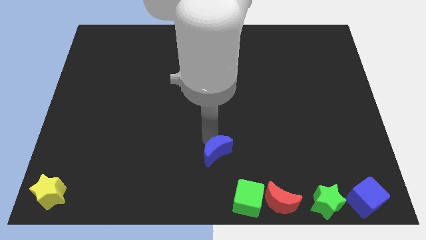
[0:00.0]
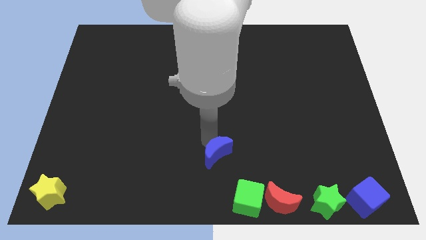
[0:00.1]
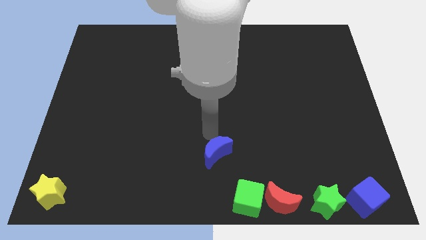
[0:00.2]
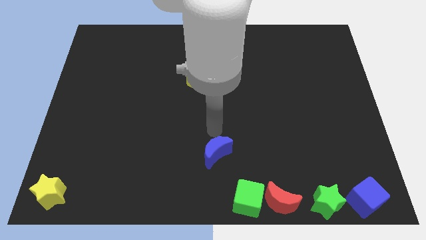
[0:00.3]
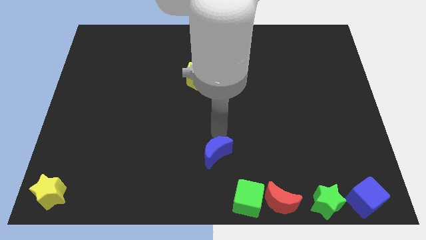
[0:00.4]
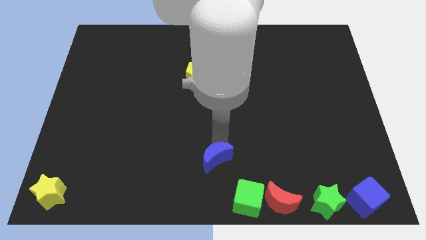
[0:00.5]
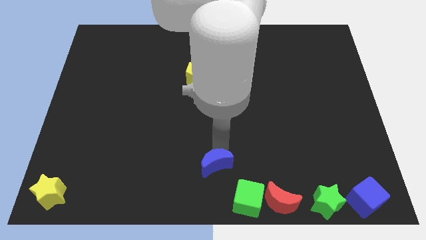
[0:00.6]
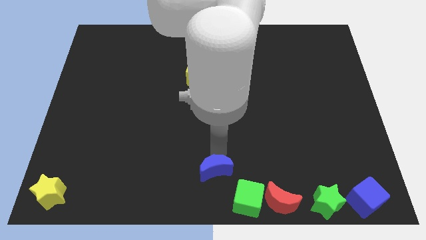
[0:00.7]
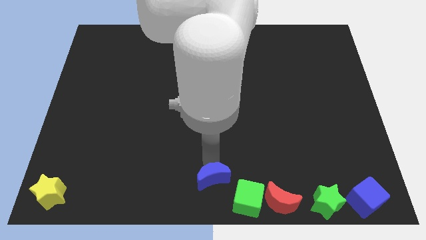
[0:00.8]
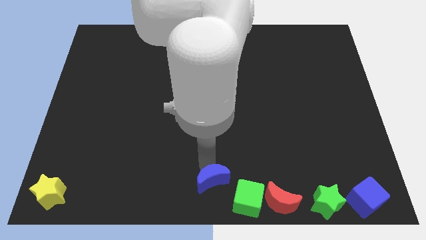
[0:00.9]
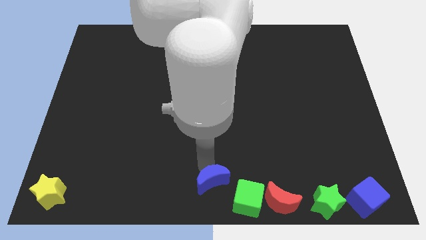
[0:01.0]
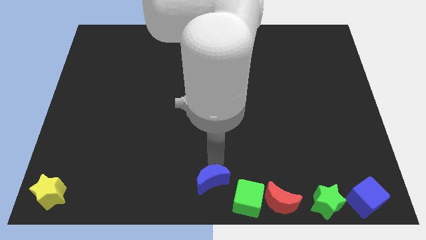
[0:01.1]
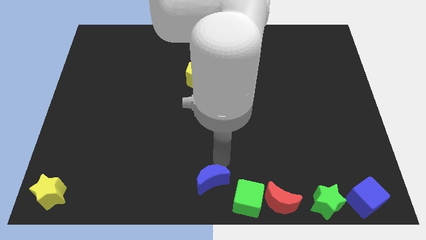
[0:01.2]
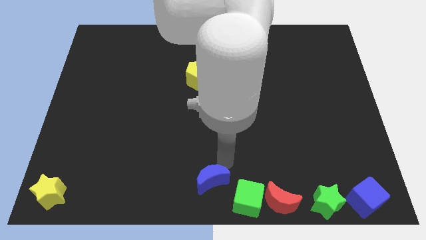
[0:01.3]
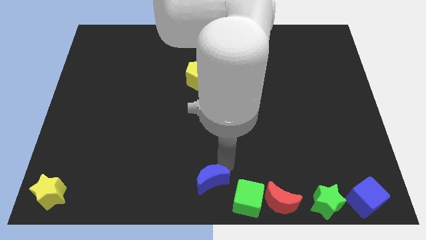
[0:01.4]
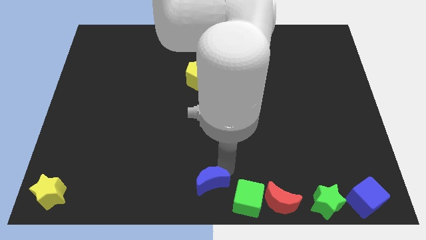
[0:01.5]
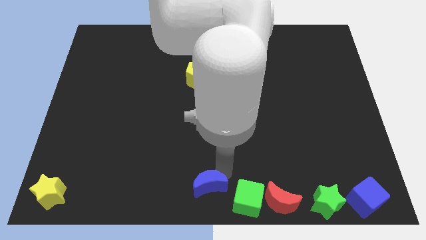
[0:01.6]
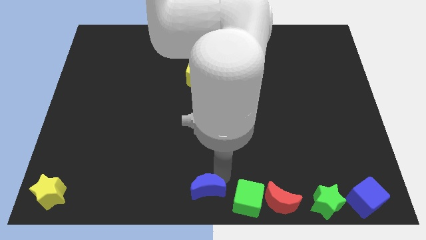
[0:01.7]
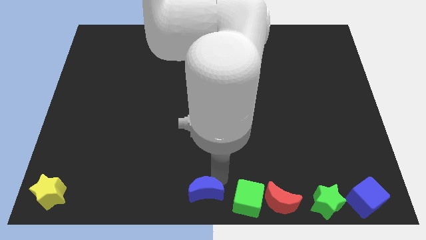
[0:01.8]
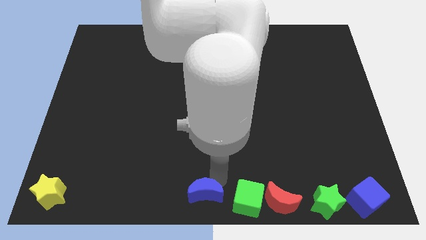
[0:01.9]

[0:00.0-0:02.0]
move the blue moon to the left of the green cube

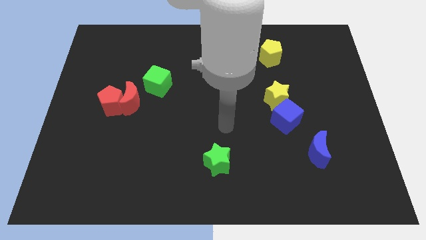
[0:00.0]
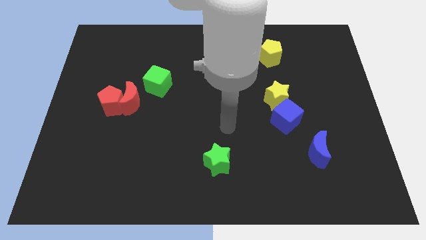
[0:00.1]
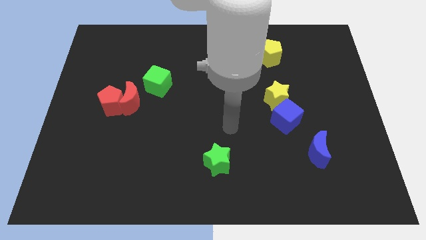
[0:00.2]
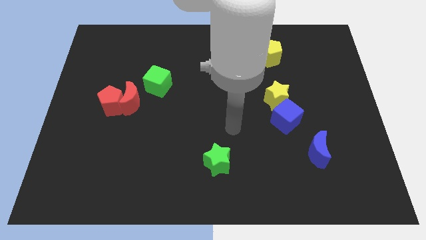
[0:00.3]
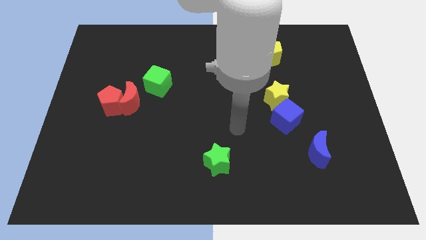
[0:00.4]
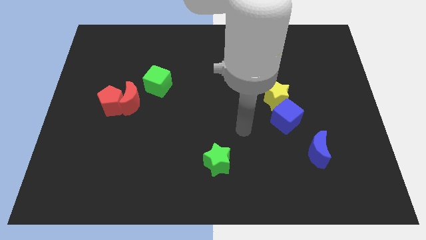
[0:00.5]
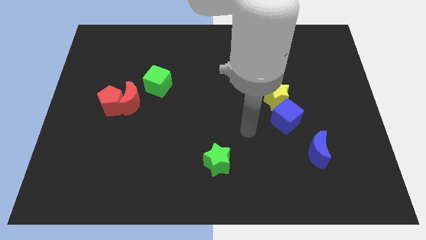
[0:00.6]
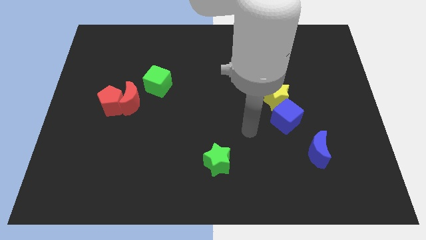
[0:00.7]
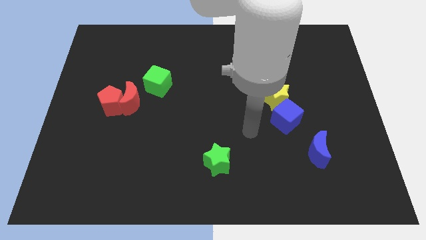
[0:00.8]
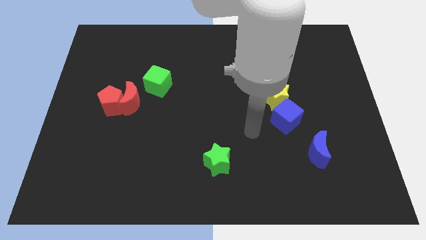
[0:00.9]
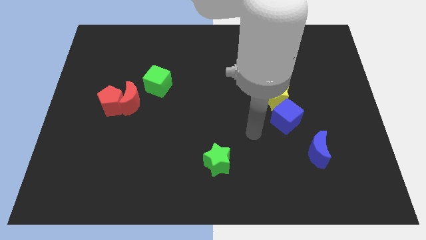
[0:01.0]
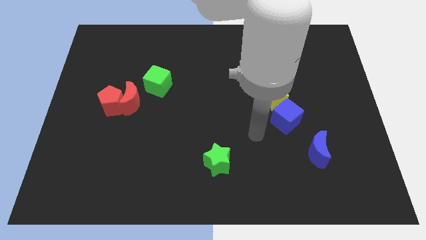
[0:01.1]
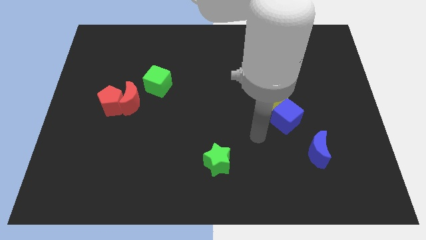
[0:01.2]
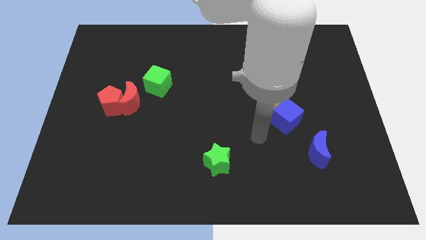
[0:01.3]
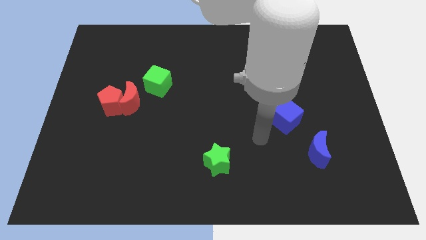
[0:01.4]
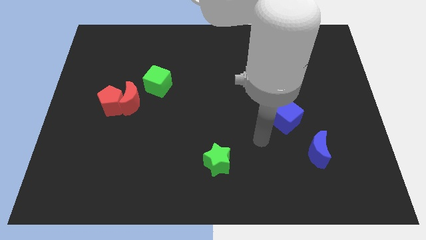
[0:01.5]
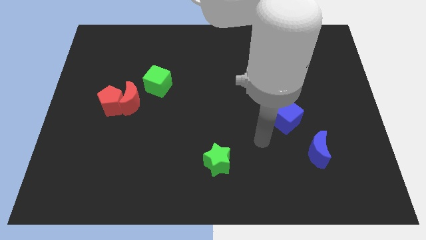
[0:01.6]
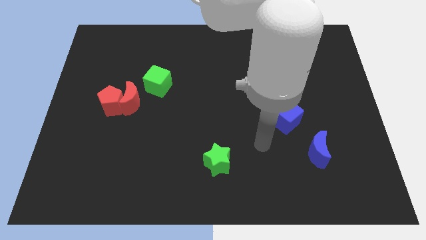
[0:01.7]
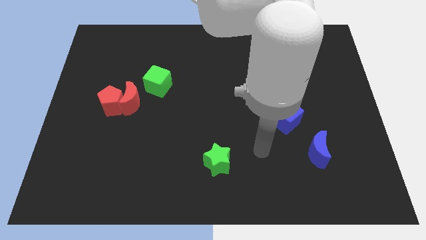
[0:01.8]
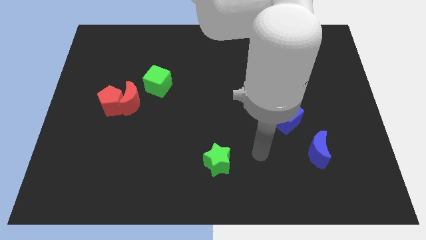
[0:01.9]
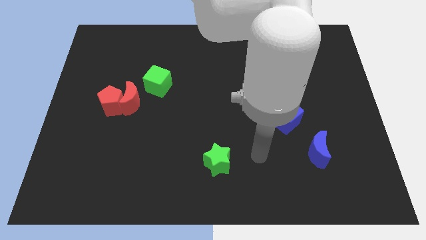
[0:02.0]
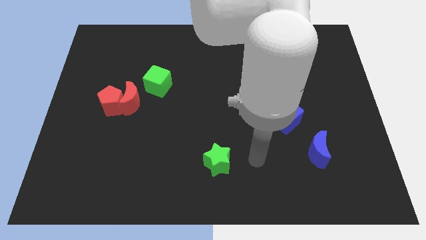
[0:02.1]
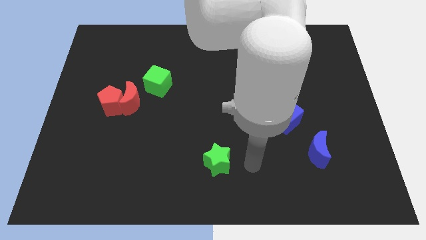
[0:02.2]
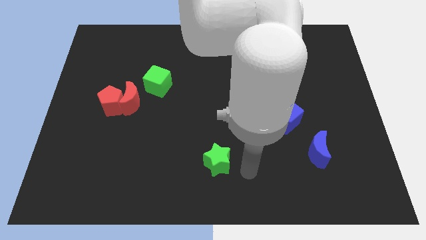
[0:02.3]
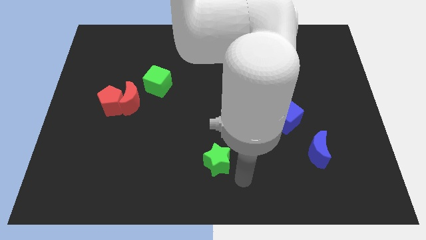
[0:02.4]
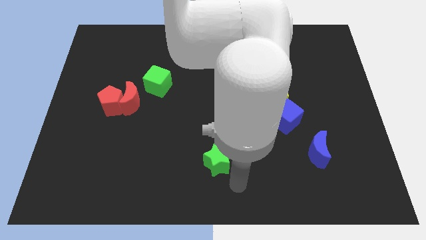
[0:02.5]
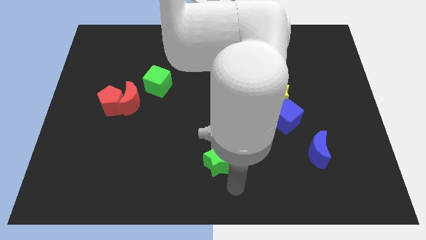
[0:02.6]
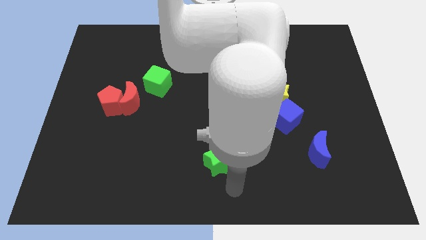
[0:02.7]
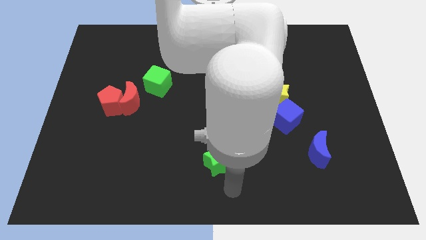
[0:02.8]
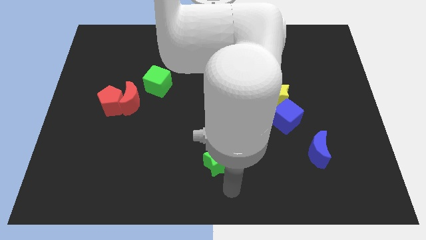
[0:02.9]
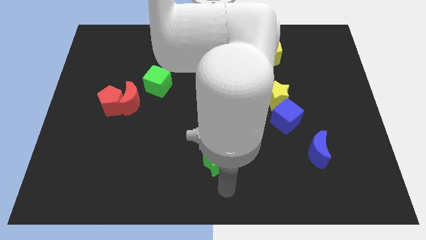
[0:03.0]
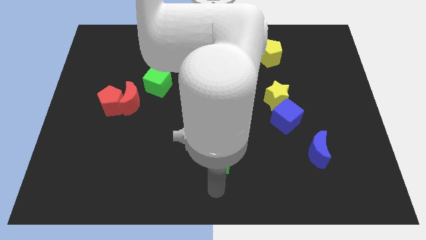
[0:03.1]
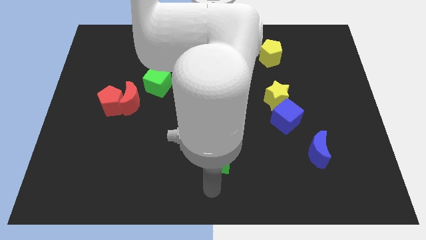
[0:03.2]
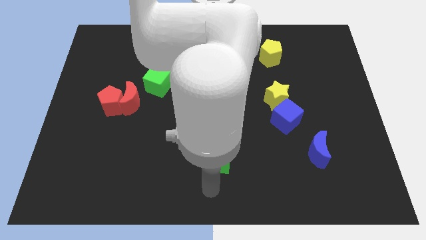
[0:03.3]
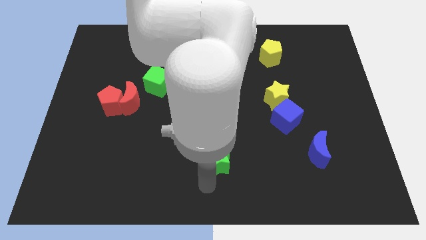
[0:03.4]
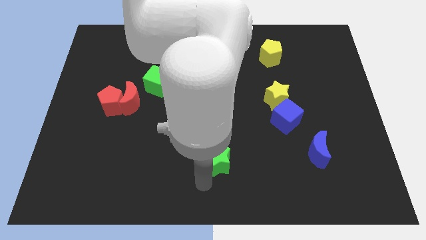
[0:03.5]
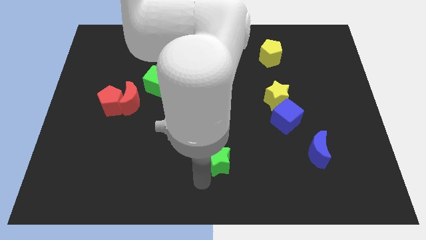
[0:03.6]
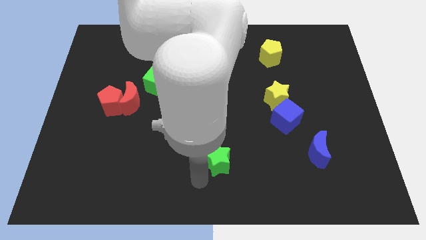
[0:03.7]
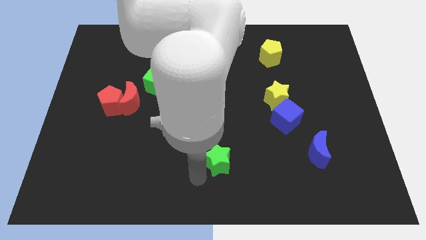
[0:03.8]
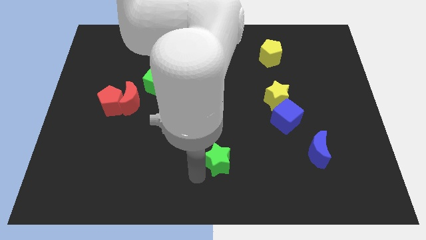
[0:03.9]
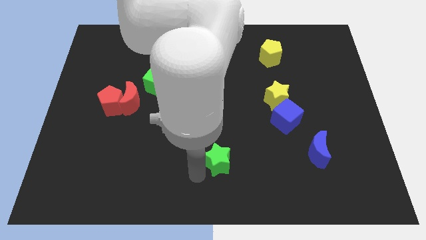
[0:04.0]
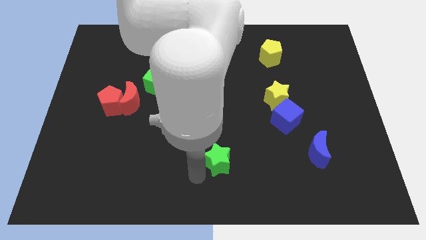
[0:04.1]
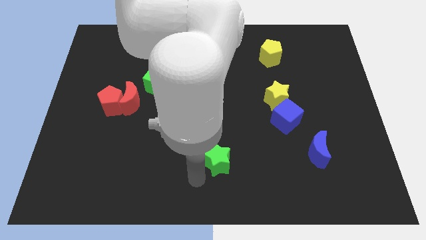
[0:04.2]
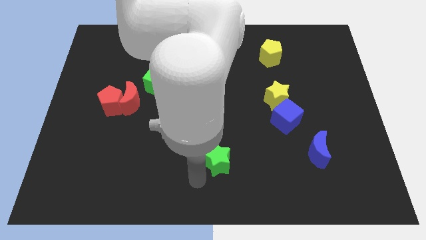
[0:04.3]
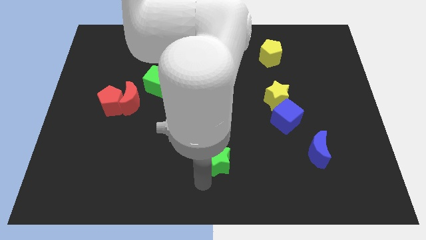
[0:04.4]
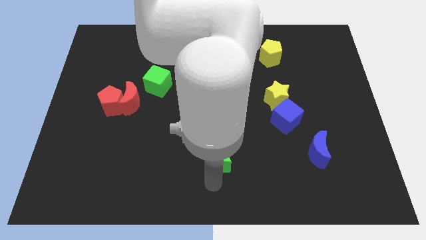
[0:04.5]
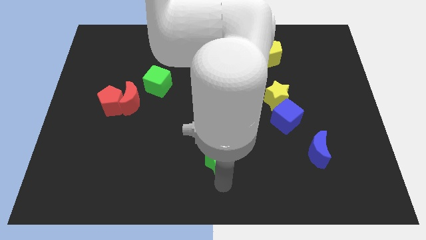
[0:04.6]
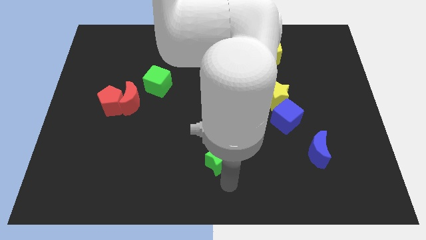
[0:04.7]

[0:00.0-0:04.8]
move your arm close to the green star

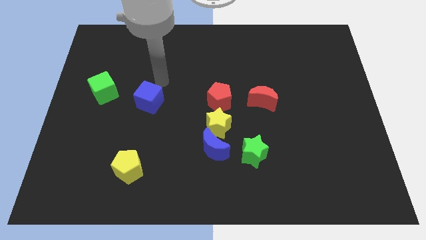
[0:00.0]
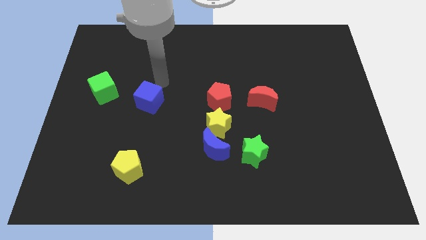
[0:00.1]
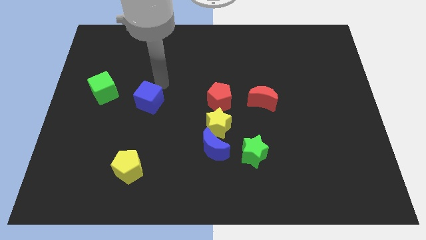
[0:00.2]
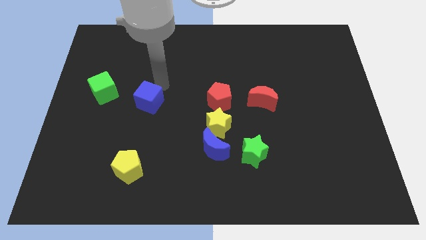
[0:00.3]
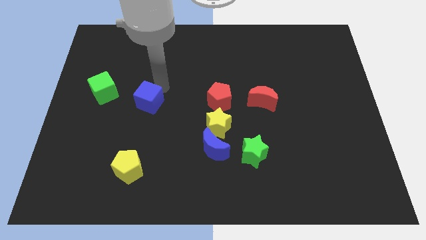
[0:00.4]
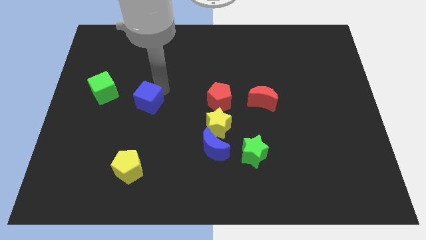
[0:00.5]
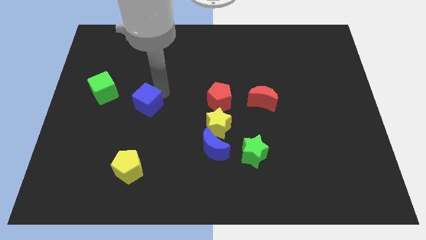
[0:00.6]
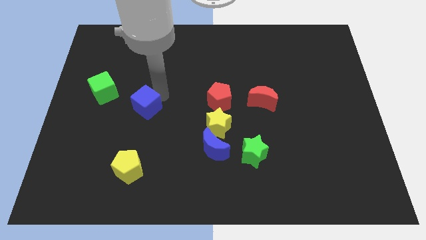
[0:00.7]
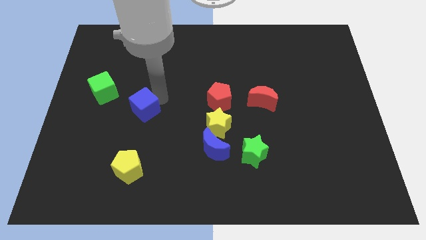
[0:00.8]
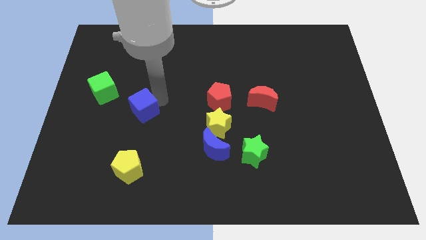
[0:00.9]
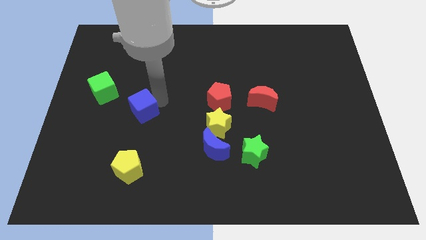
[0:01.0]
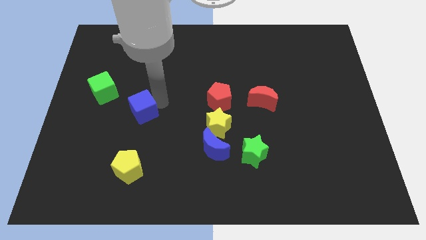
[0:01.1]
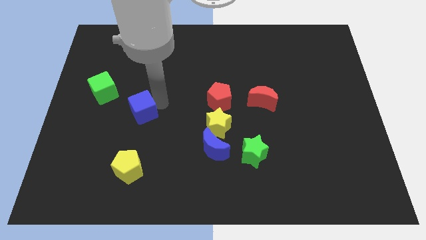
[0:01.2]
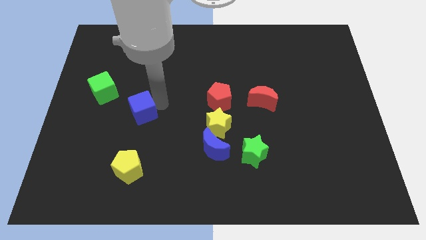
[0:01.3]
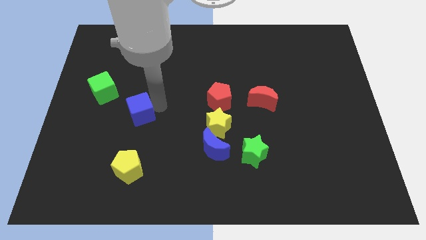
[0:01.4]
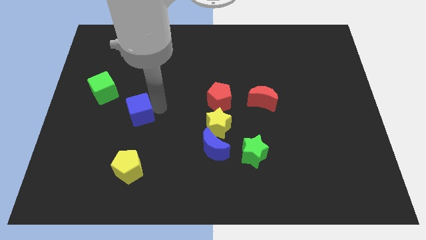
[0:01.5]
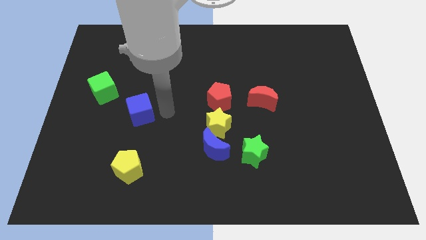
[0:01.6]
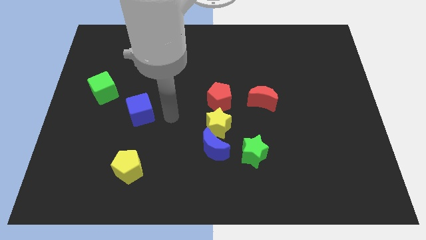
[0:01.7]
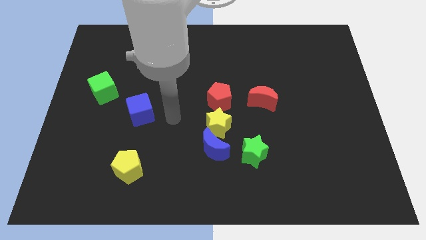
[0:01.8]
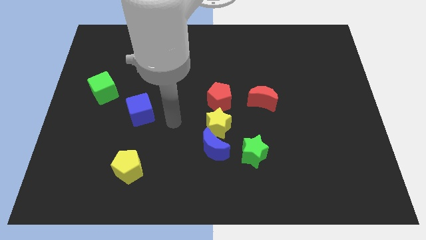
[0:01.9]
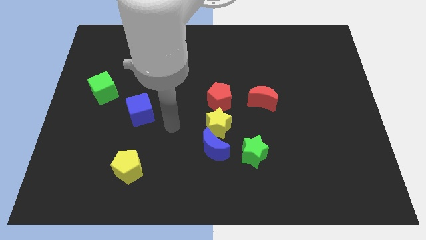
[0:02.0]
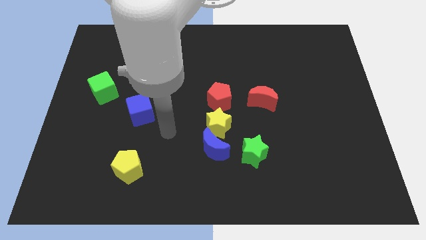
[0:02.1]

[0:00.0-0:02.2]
place blue cube to the bottom right of green cube

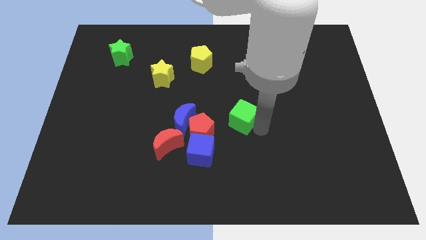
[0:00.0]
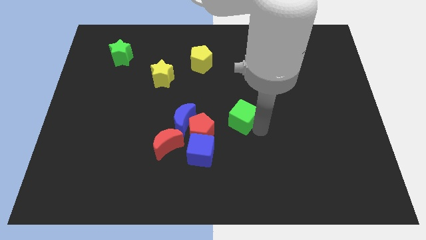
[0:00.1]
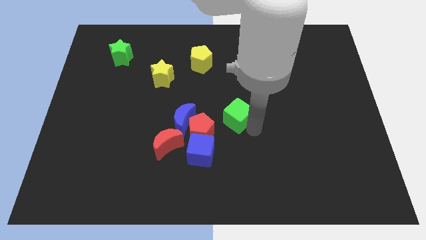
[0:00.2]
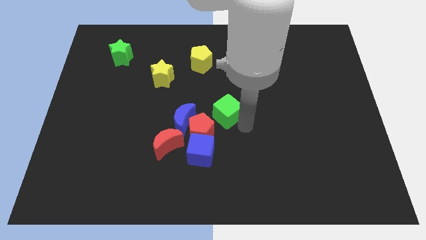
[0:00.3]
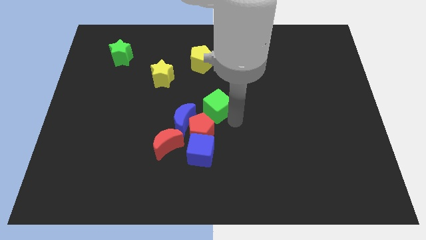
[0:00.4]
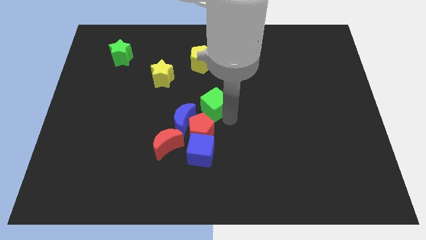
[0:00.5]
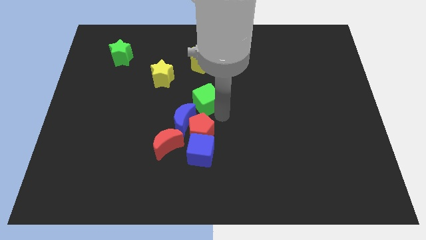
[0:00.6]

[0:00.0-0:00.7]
place the green cube above the red pentagon
